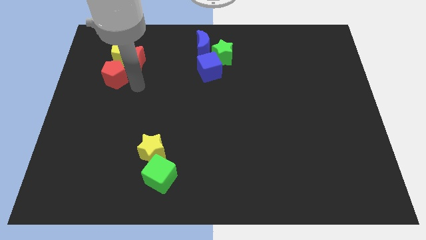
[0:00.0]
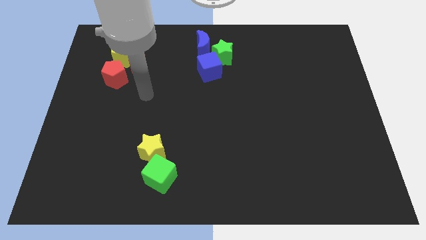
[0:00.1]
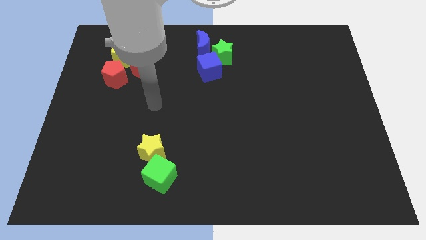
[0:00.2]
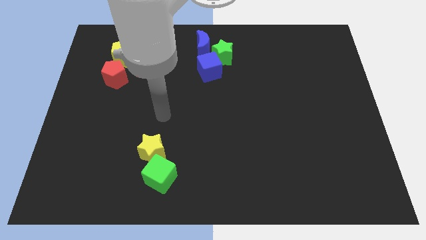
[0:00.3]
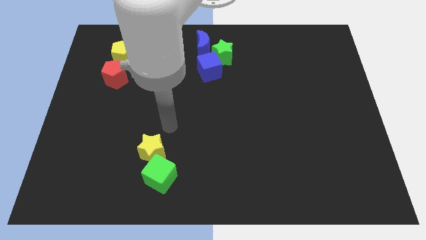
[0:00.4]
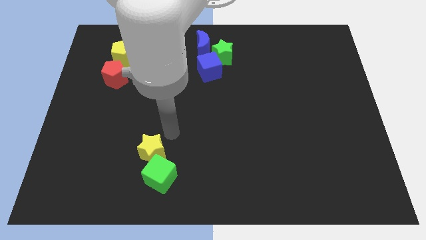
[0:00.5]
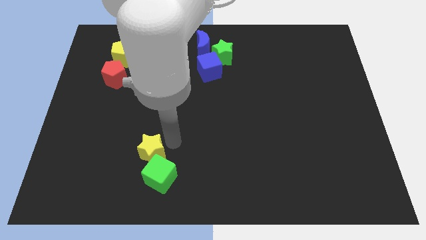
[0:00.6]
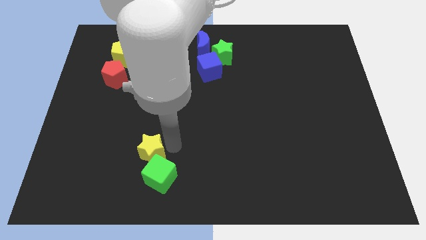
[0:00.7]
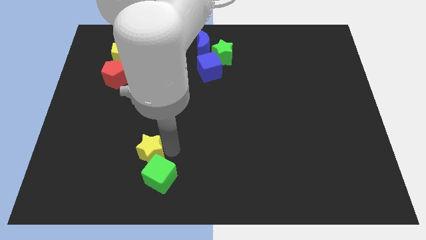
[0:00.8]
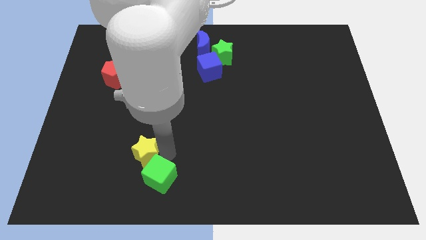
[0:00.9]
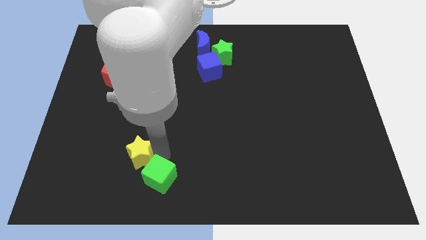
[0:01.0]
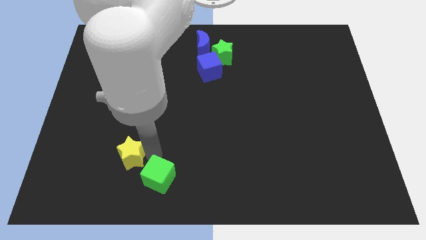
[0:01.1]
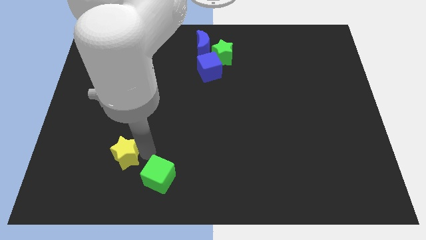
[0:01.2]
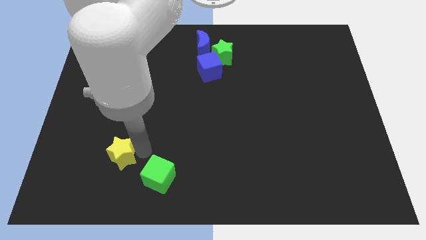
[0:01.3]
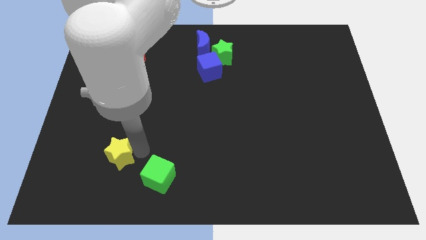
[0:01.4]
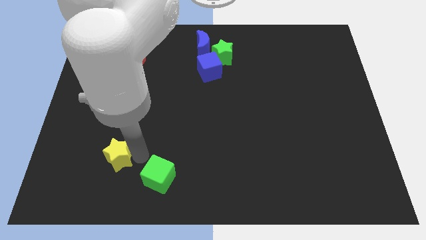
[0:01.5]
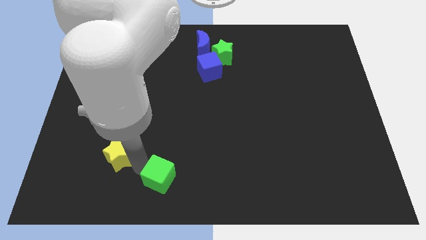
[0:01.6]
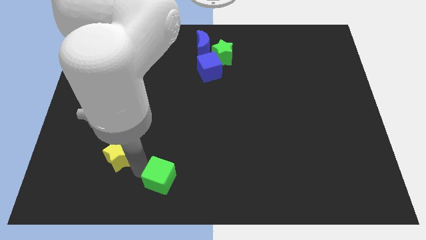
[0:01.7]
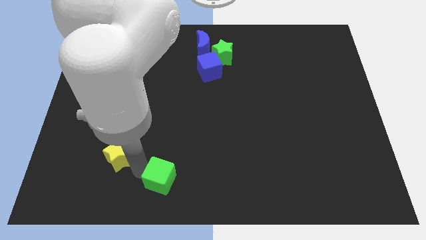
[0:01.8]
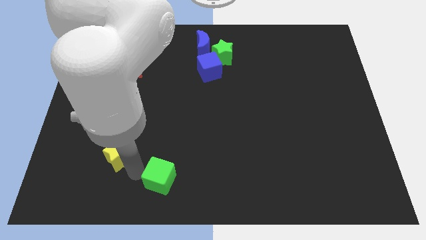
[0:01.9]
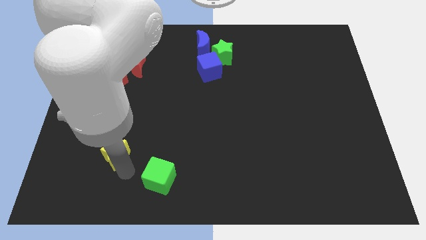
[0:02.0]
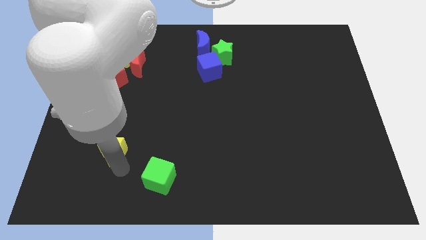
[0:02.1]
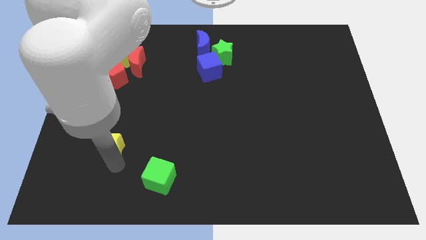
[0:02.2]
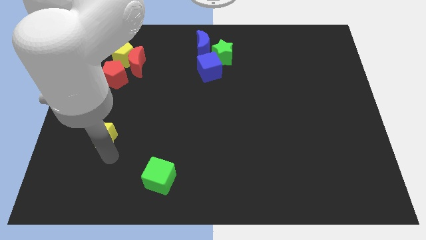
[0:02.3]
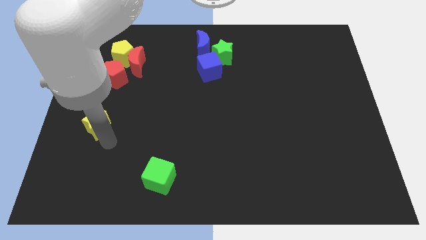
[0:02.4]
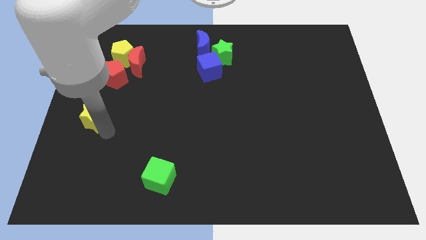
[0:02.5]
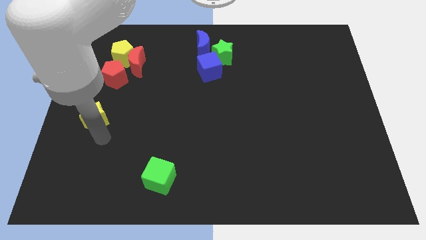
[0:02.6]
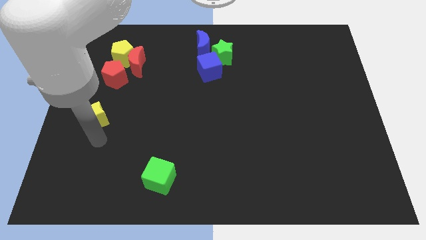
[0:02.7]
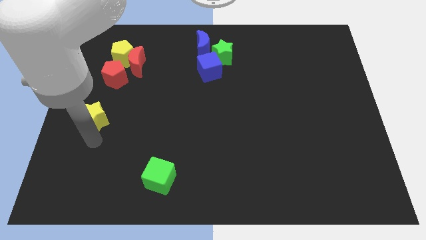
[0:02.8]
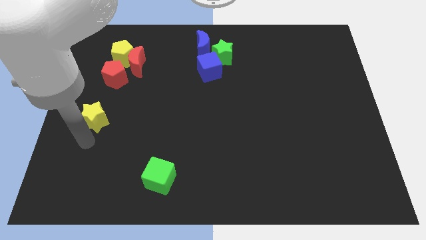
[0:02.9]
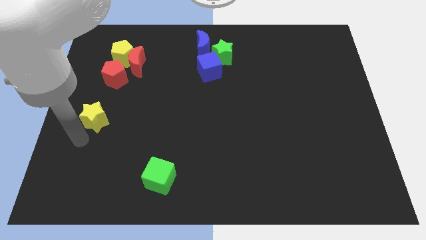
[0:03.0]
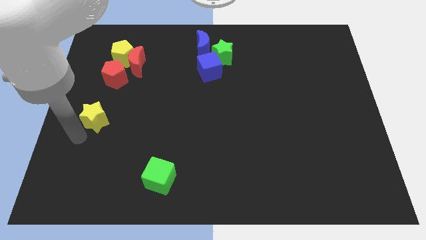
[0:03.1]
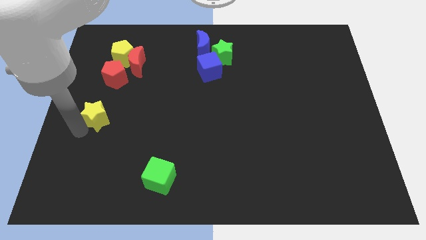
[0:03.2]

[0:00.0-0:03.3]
move the yellow star towards the center left of the board

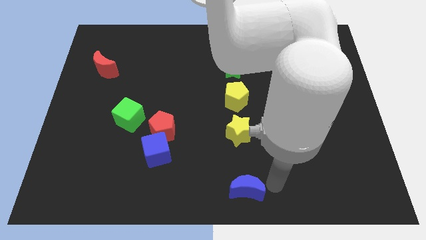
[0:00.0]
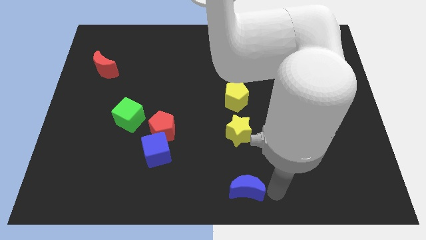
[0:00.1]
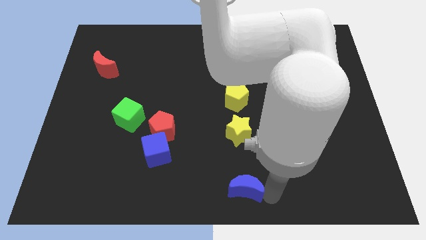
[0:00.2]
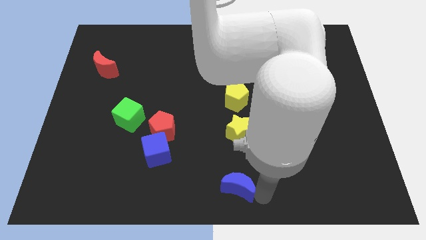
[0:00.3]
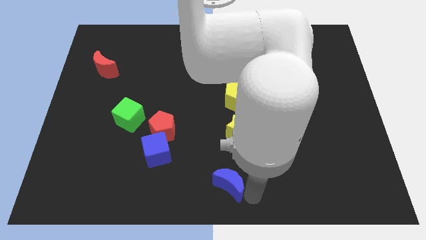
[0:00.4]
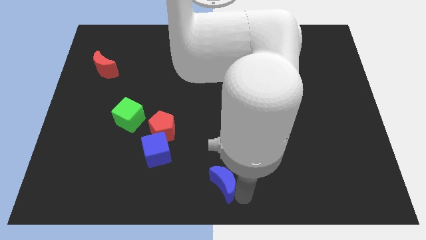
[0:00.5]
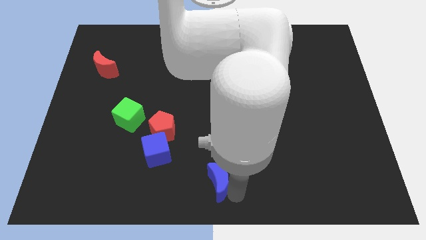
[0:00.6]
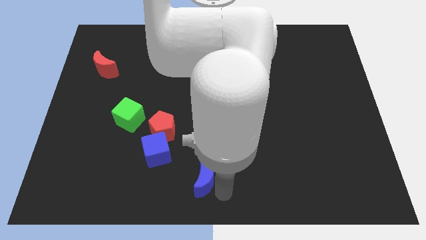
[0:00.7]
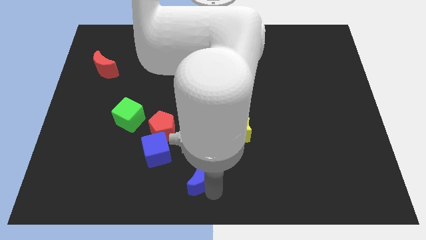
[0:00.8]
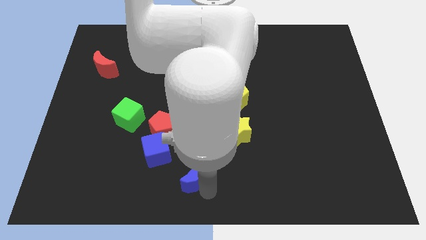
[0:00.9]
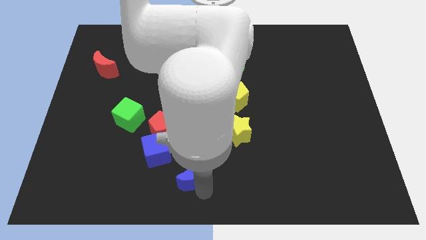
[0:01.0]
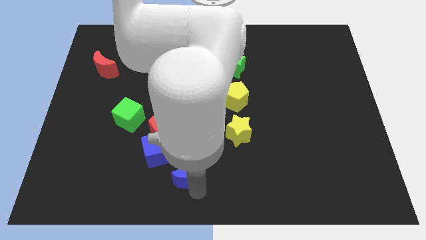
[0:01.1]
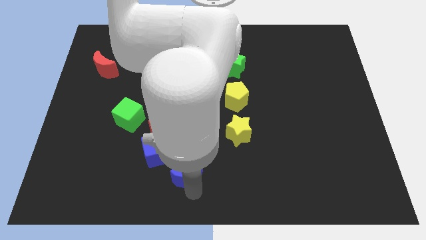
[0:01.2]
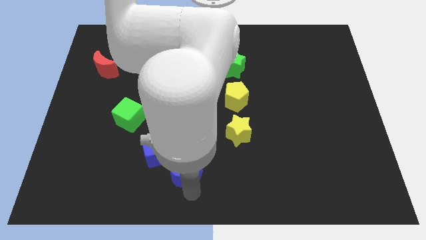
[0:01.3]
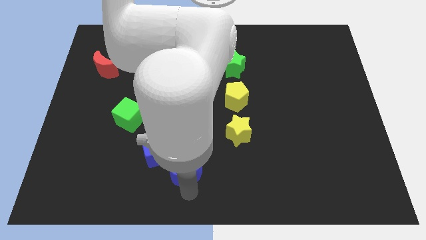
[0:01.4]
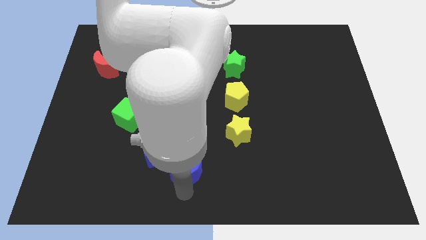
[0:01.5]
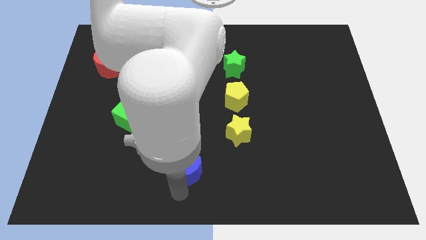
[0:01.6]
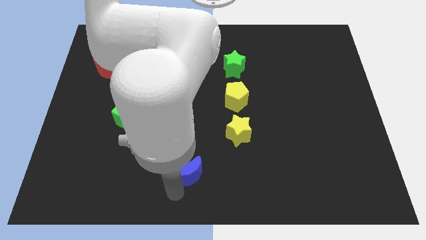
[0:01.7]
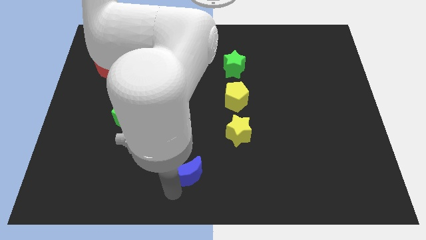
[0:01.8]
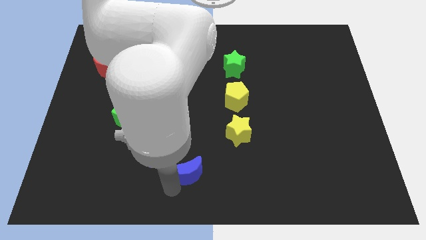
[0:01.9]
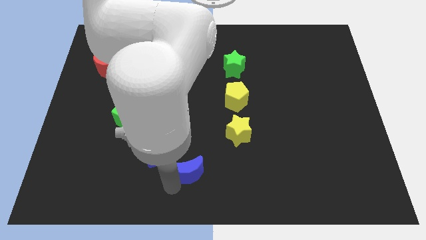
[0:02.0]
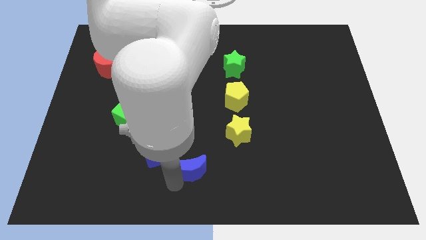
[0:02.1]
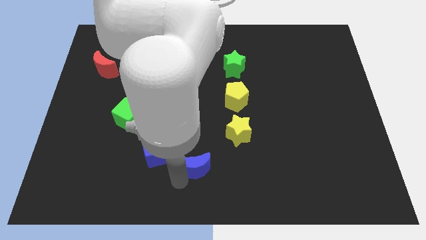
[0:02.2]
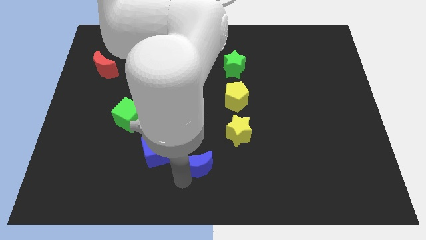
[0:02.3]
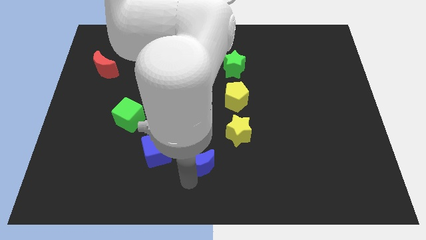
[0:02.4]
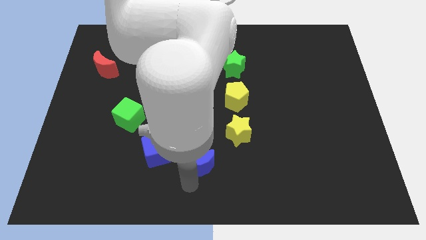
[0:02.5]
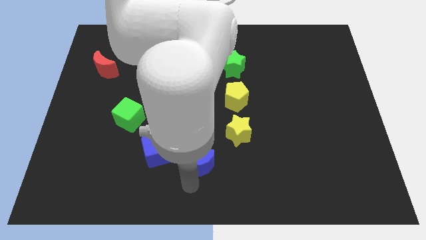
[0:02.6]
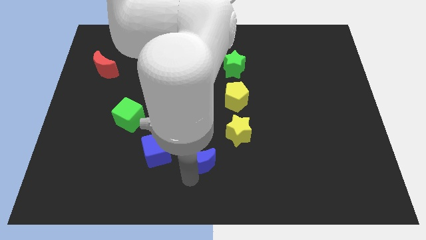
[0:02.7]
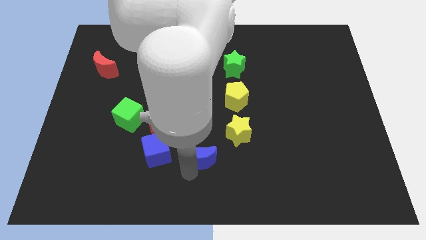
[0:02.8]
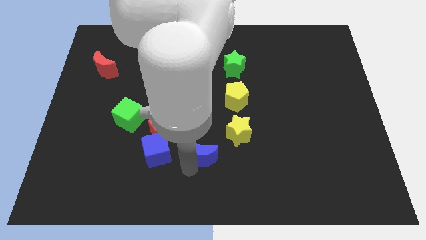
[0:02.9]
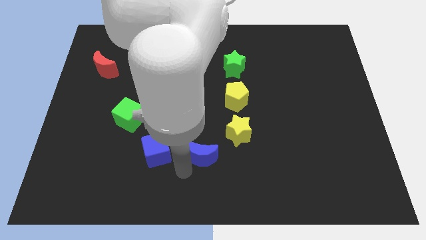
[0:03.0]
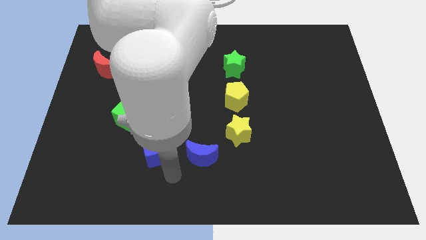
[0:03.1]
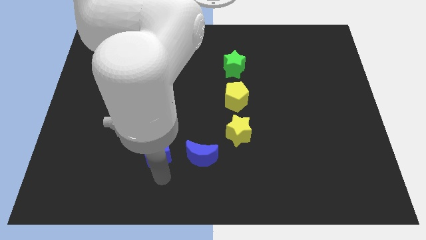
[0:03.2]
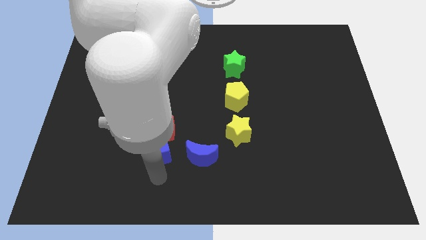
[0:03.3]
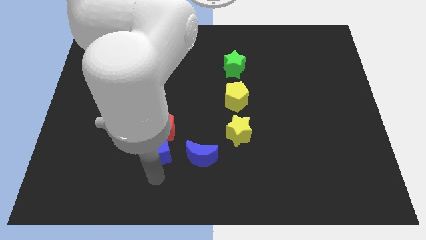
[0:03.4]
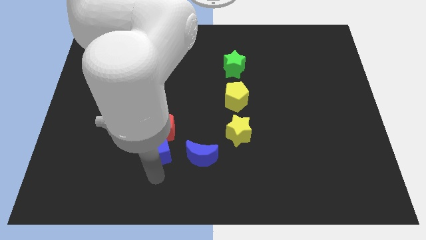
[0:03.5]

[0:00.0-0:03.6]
move the blue crescent to the right of the blue cube

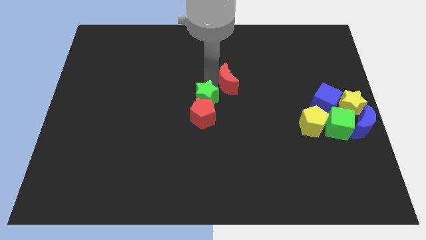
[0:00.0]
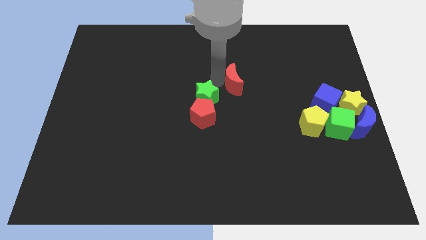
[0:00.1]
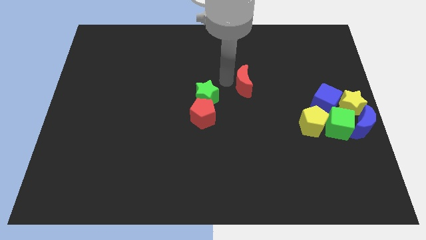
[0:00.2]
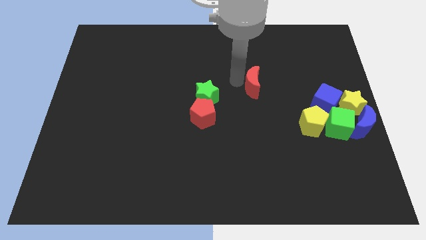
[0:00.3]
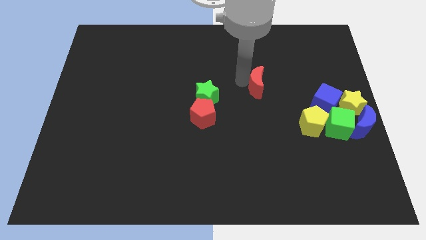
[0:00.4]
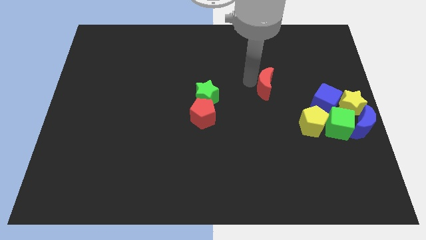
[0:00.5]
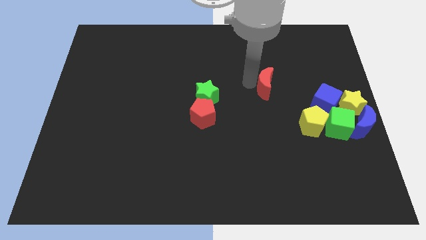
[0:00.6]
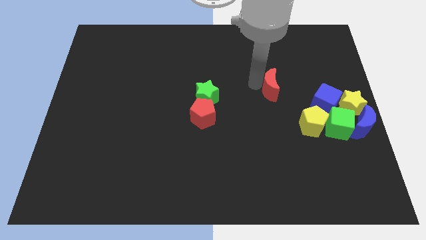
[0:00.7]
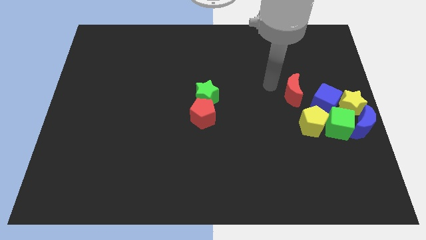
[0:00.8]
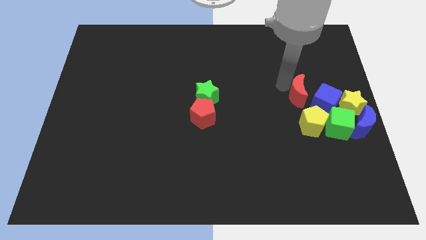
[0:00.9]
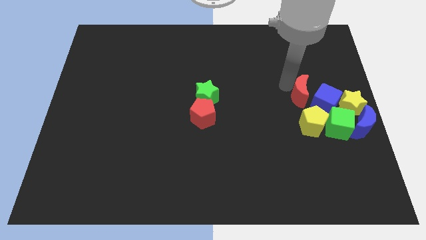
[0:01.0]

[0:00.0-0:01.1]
place the red moon left to the blue cube

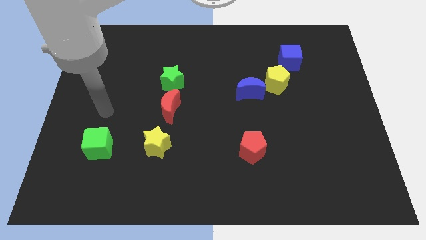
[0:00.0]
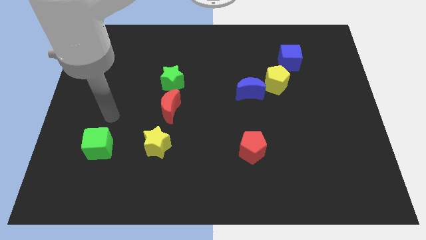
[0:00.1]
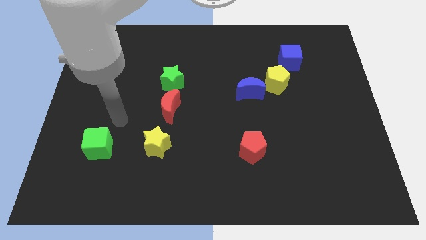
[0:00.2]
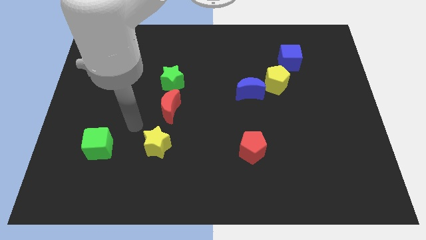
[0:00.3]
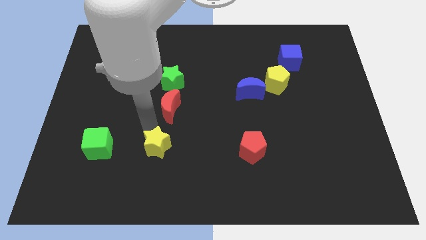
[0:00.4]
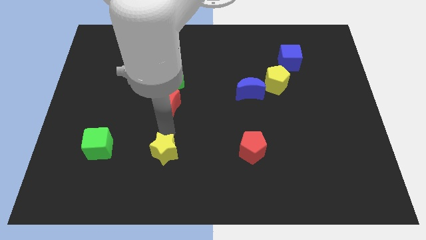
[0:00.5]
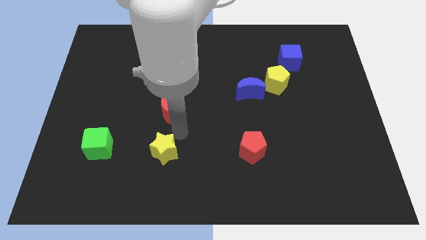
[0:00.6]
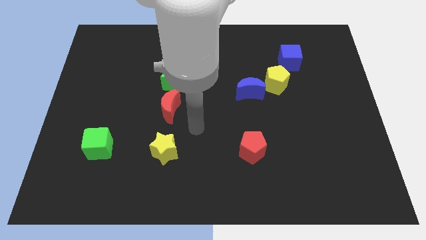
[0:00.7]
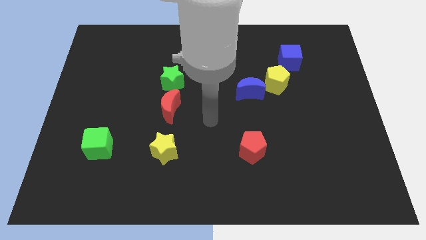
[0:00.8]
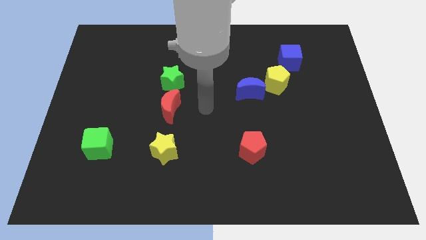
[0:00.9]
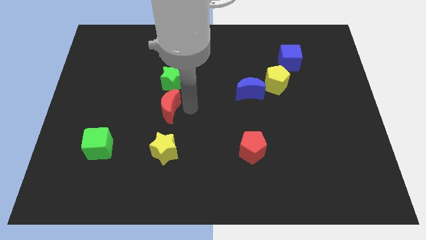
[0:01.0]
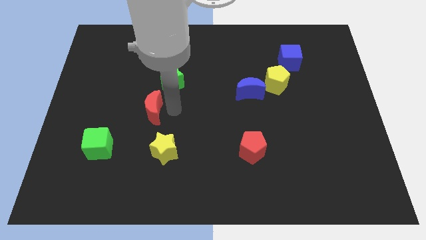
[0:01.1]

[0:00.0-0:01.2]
push the yellow star slightly to the bottom of the board
